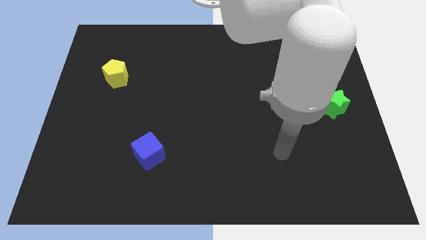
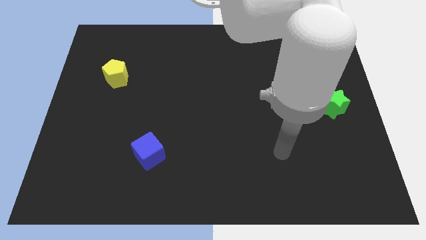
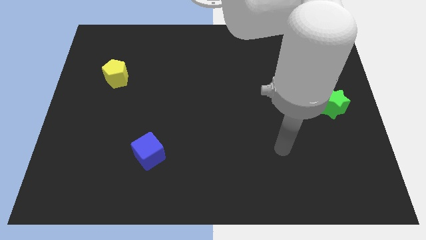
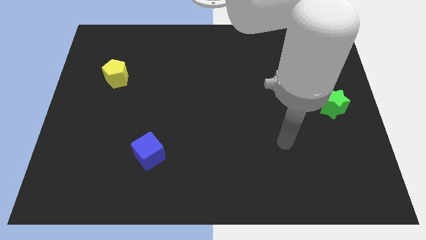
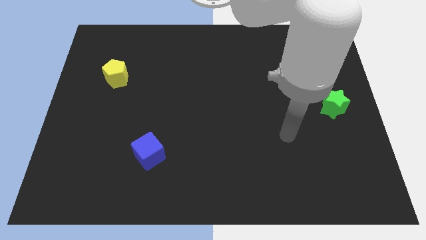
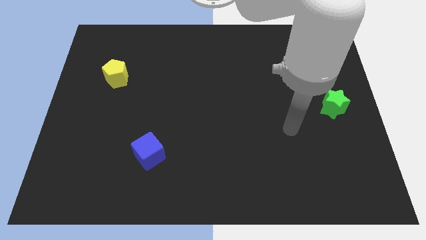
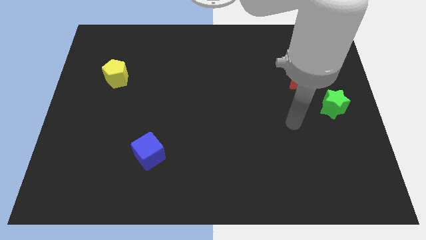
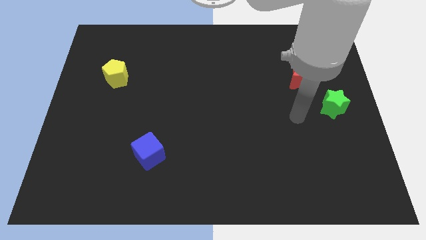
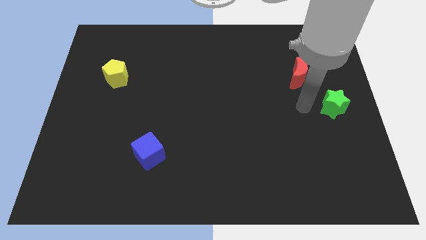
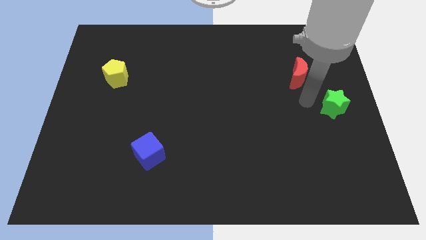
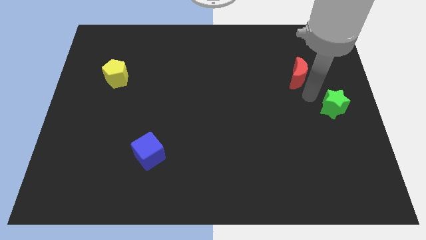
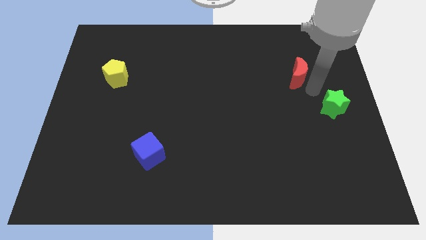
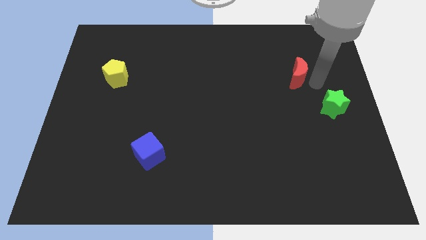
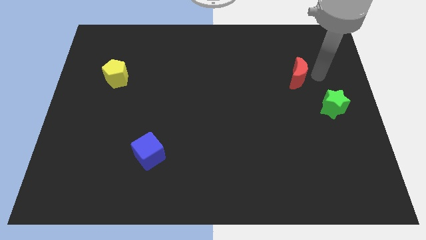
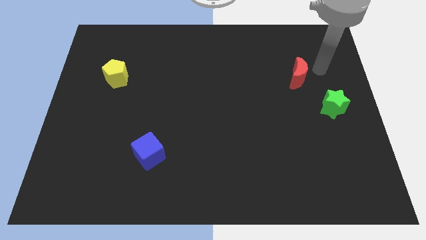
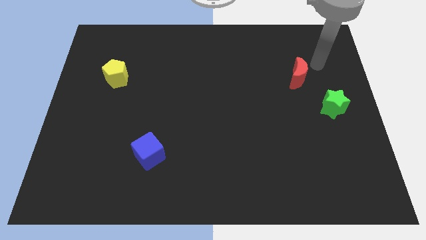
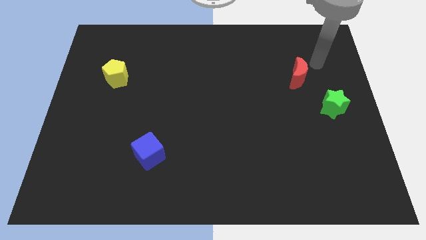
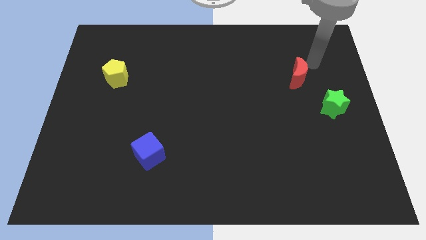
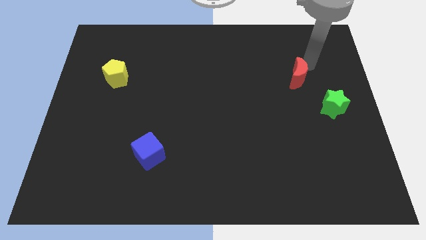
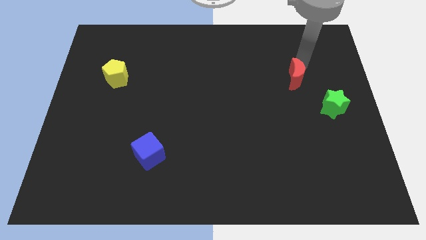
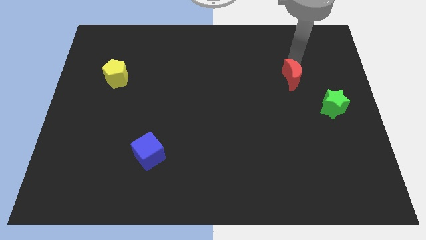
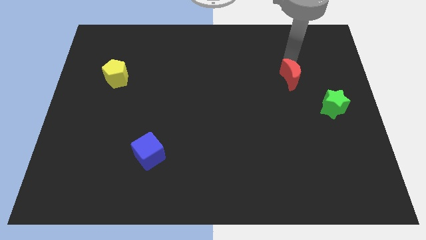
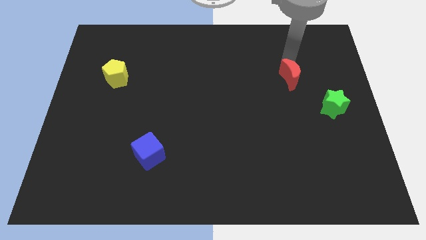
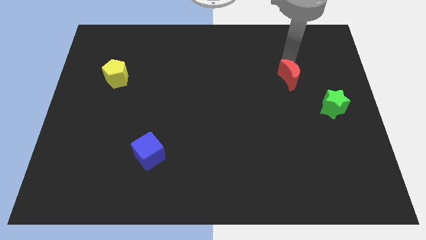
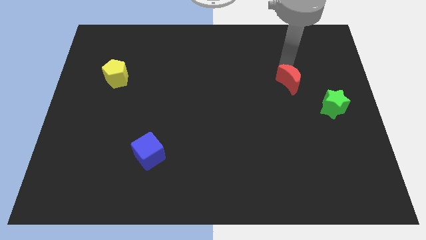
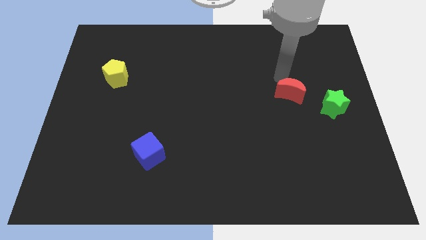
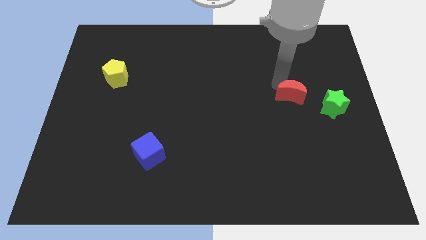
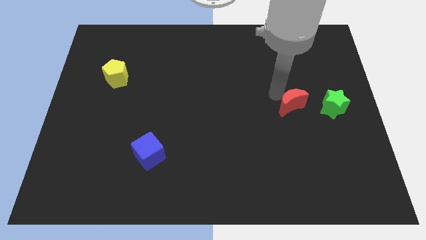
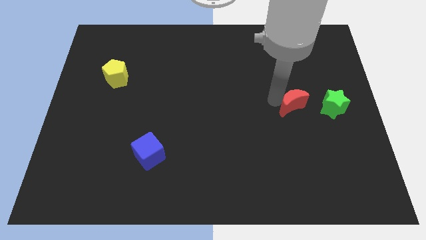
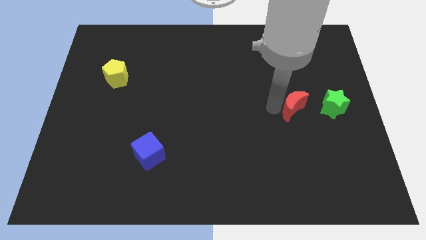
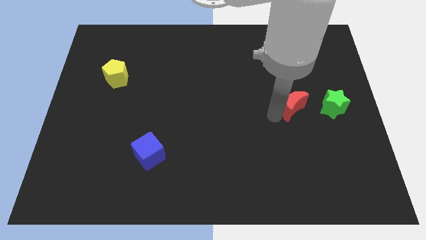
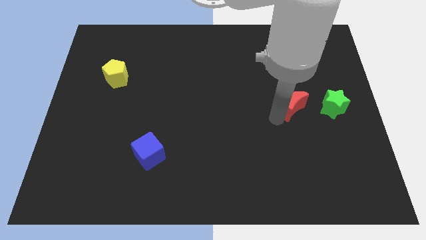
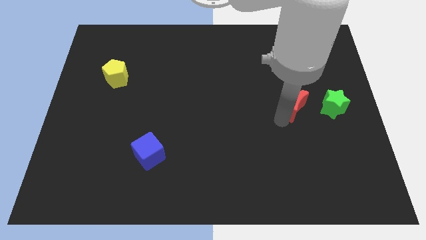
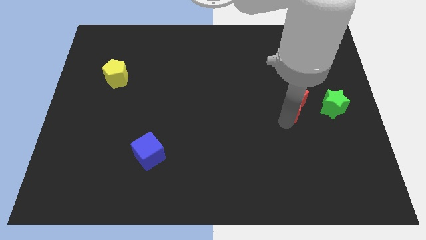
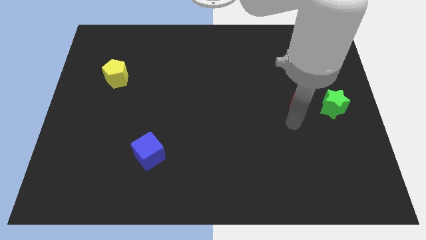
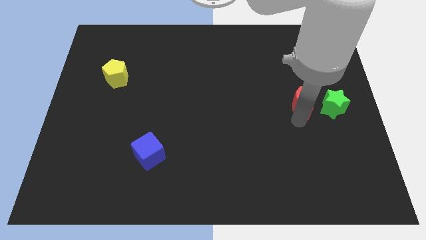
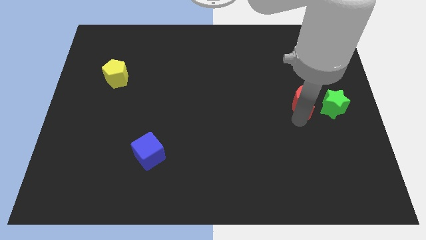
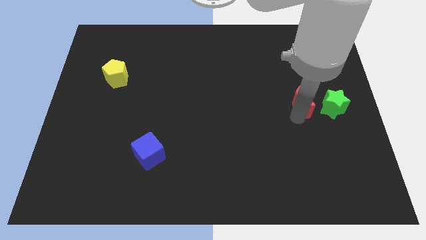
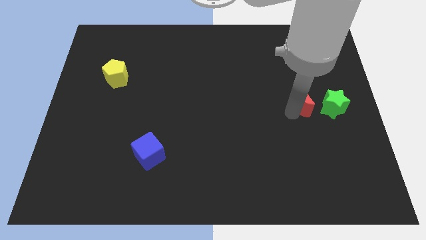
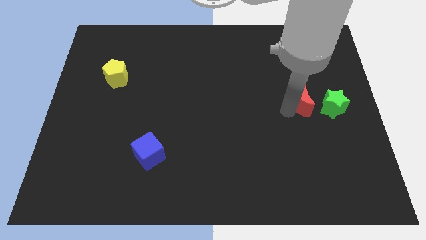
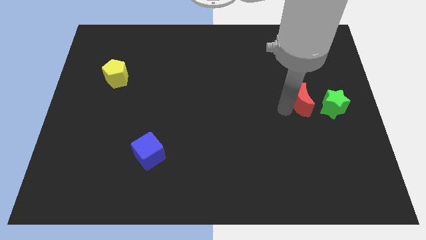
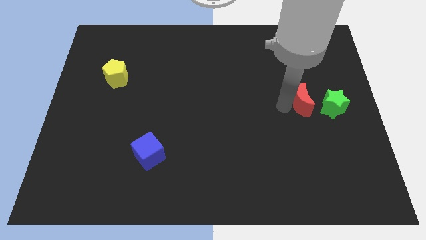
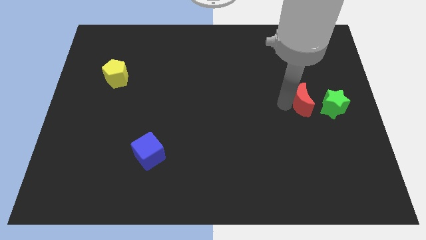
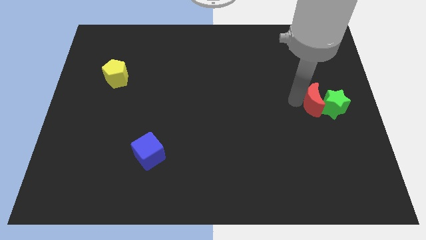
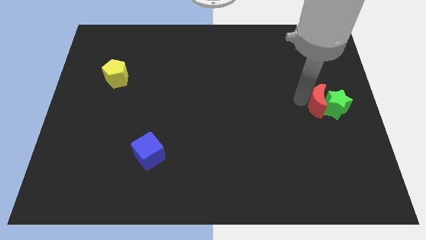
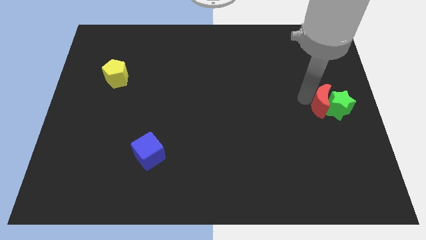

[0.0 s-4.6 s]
move the moon next to the star

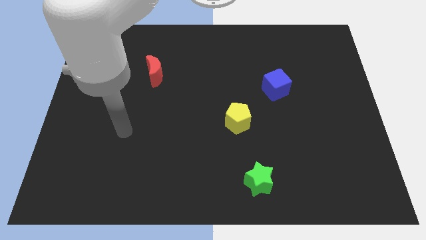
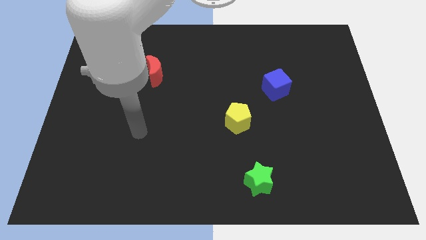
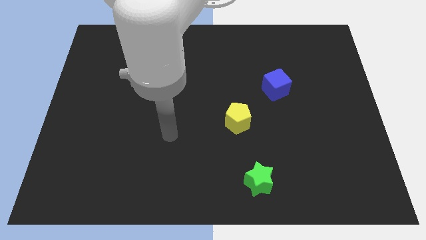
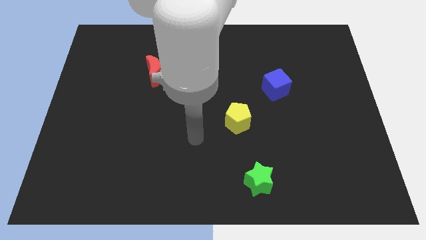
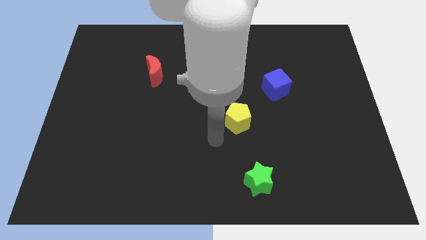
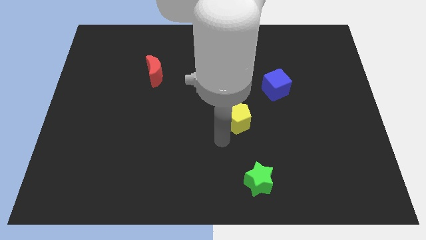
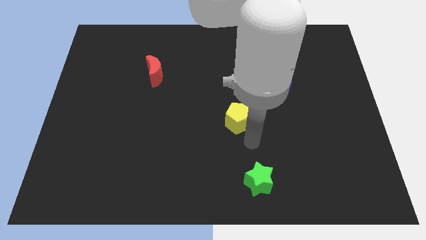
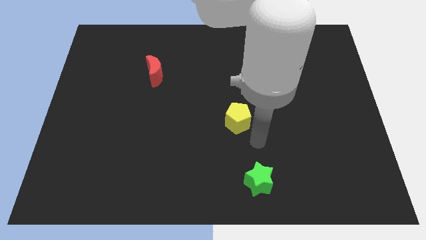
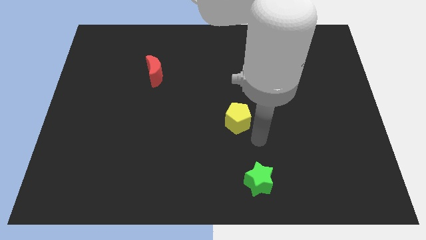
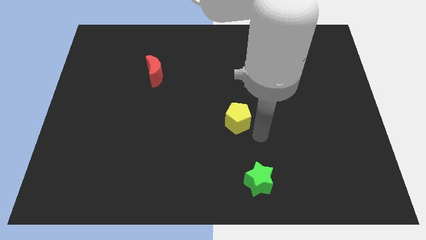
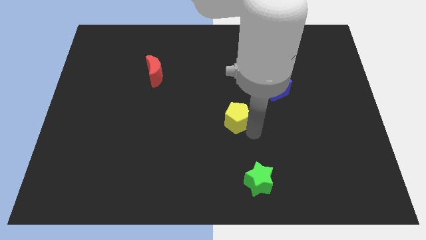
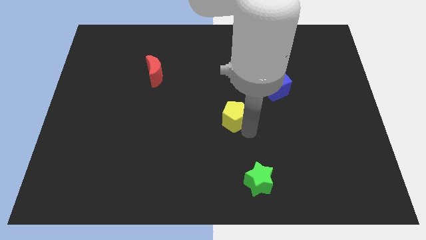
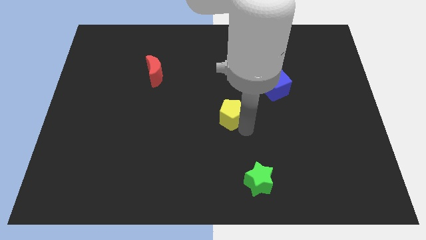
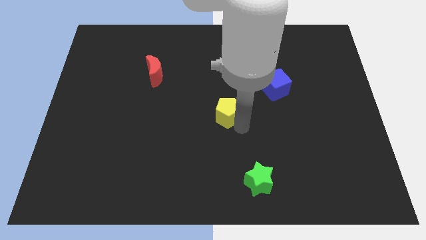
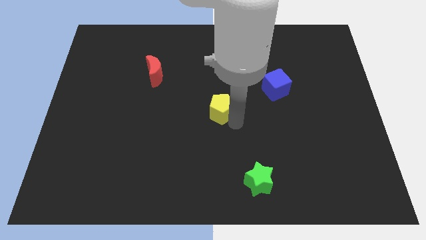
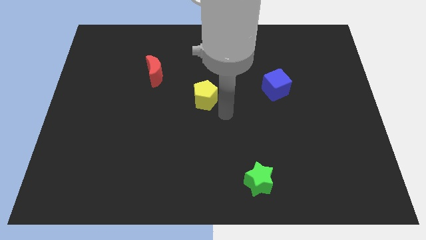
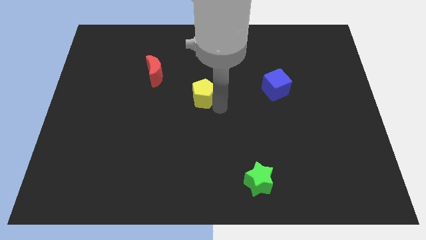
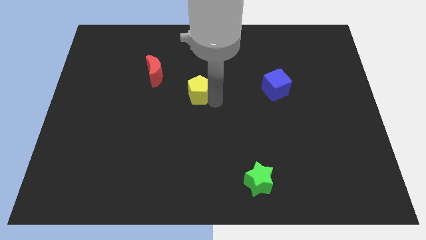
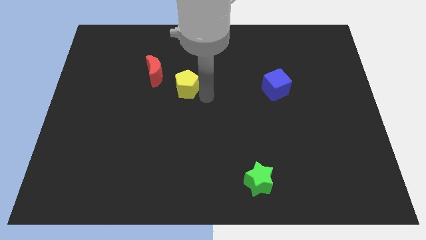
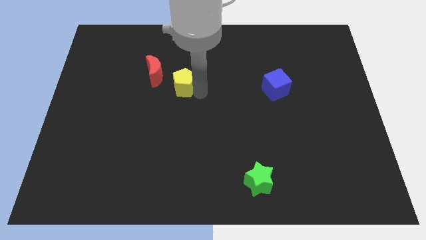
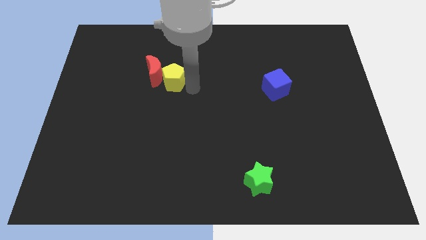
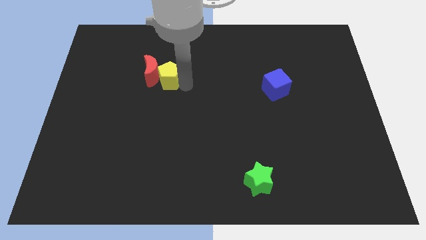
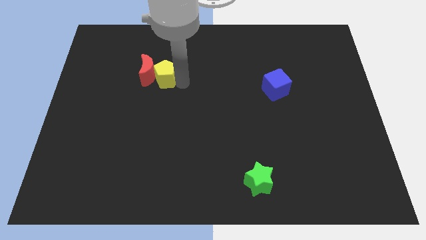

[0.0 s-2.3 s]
put the pentagon next to the moon

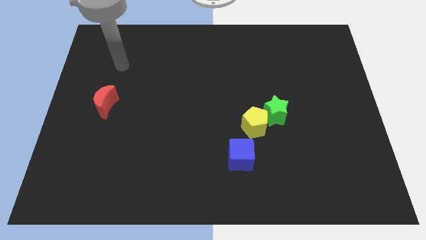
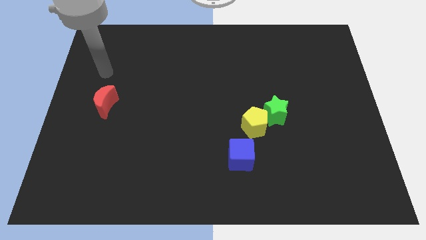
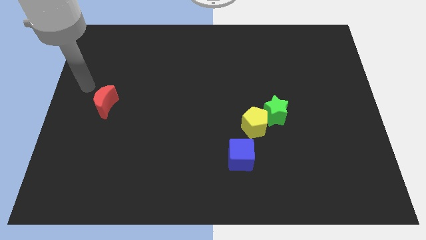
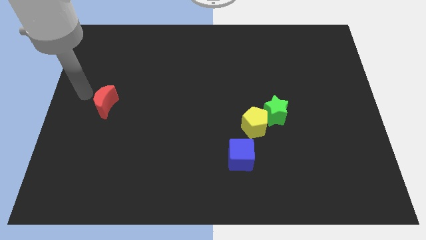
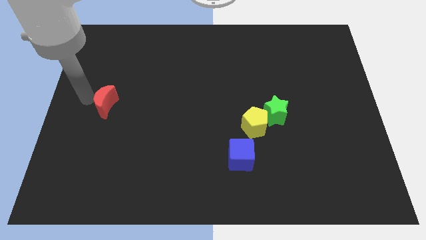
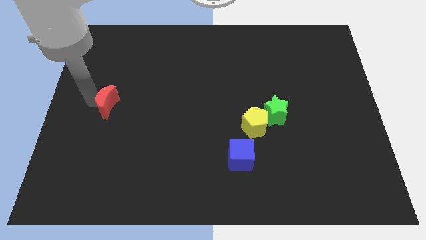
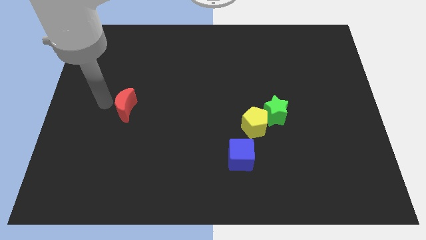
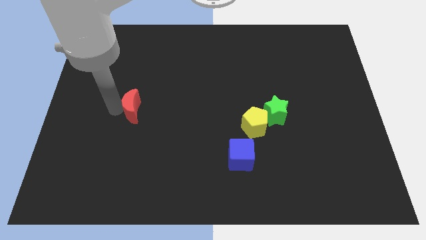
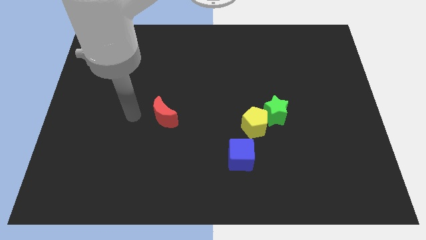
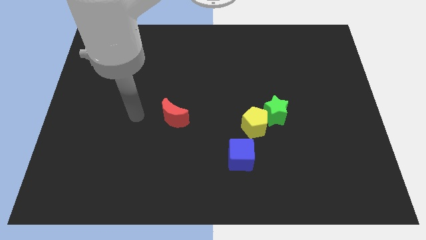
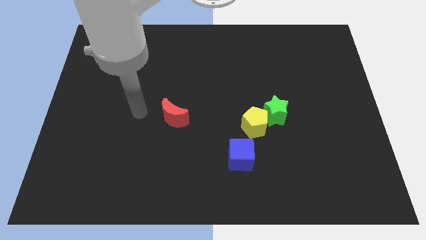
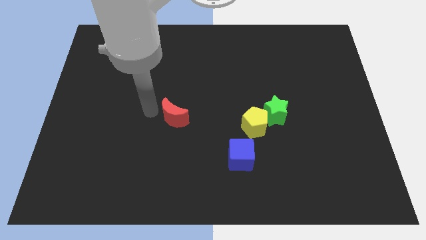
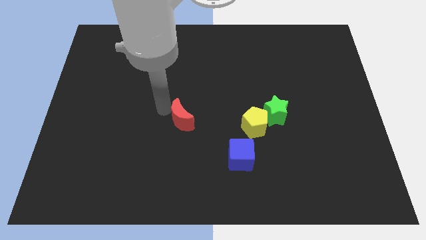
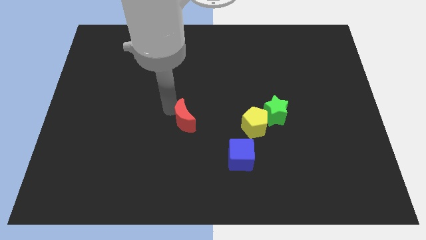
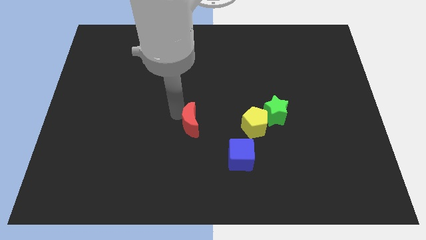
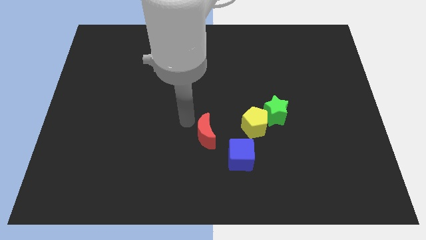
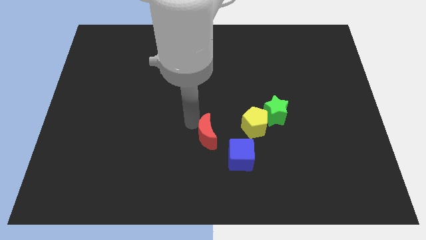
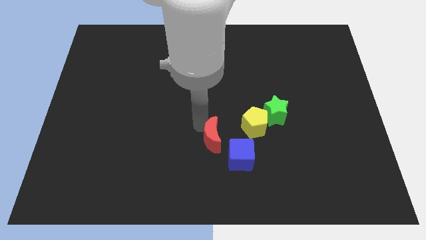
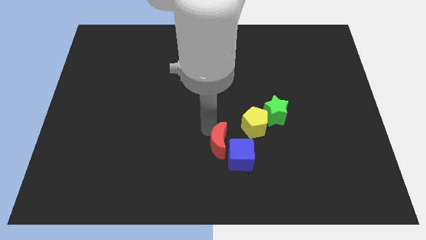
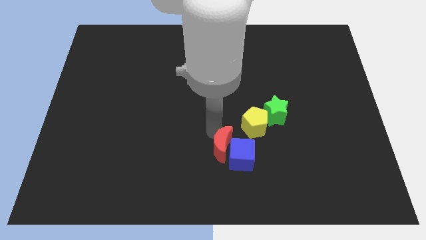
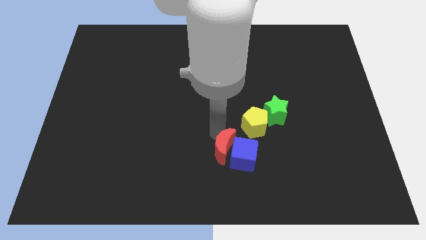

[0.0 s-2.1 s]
push the moon to the cube
